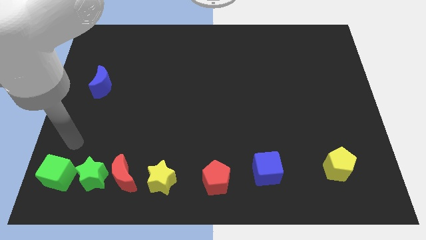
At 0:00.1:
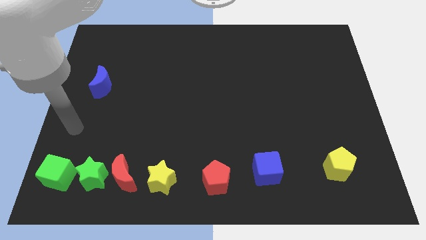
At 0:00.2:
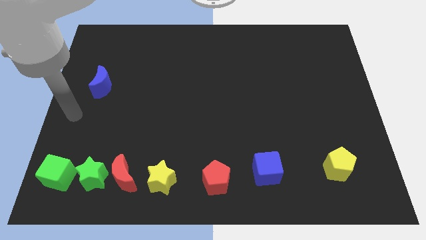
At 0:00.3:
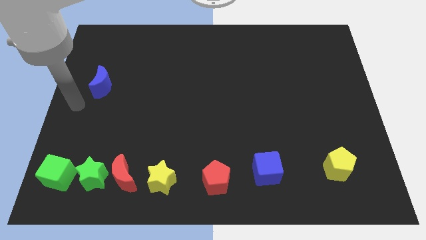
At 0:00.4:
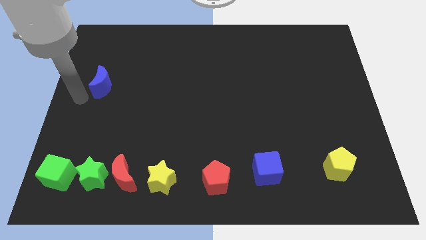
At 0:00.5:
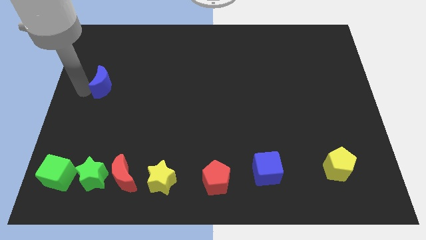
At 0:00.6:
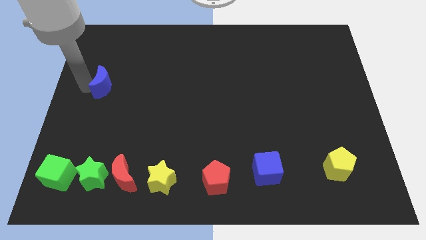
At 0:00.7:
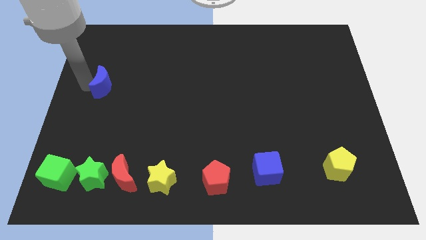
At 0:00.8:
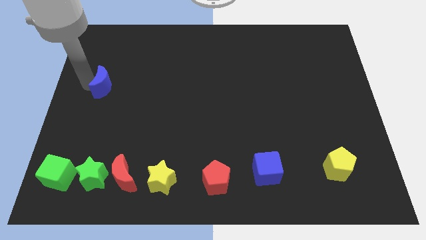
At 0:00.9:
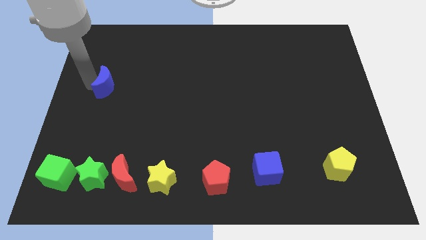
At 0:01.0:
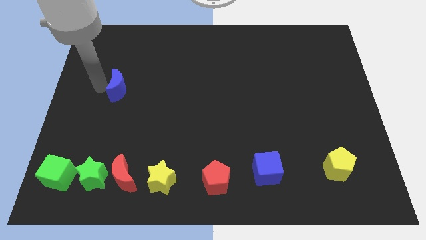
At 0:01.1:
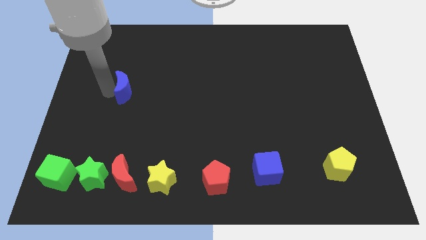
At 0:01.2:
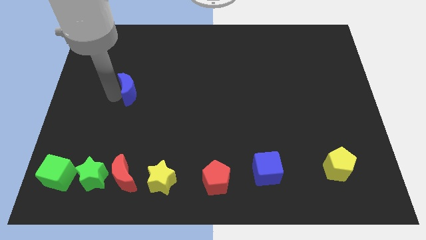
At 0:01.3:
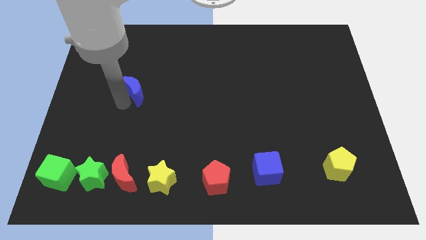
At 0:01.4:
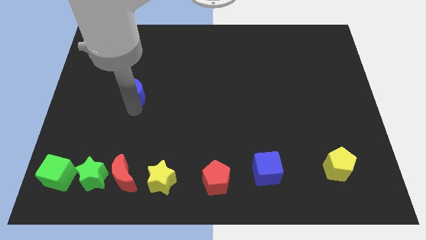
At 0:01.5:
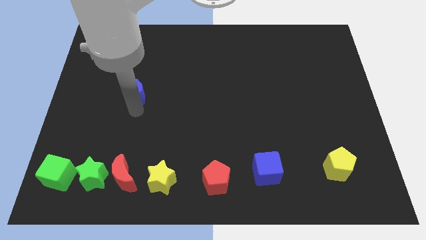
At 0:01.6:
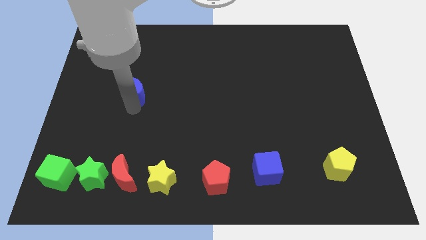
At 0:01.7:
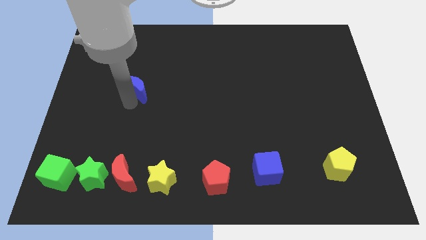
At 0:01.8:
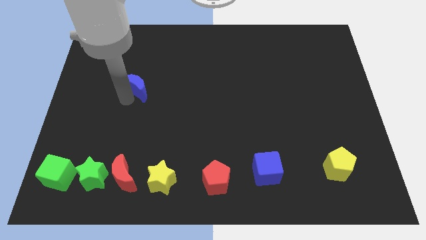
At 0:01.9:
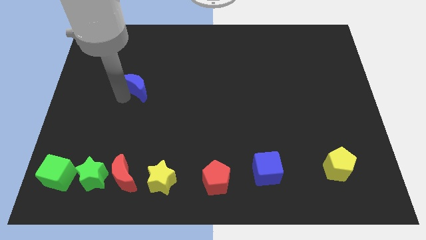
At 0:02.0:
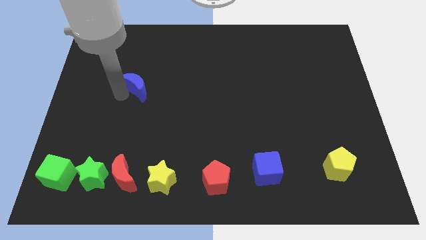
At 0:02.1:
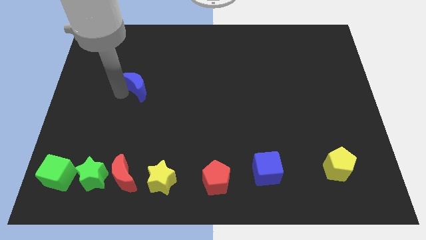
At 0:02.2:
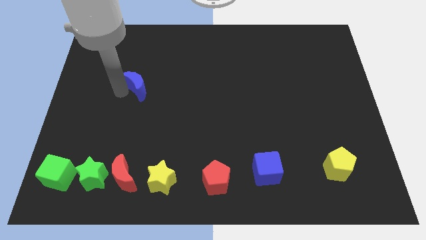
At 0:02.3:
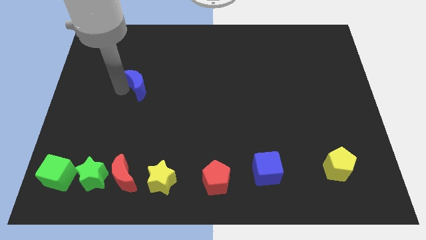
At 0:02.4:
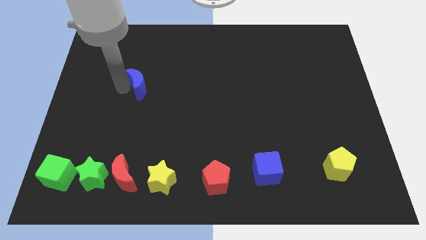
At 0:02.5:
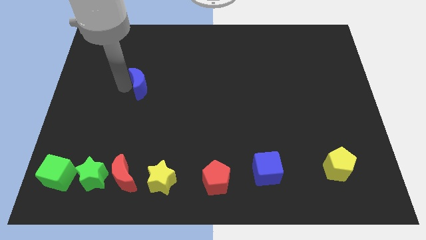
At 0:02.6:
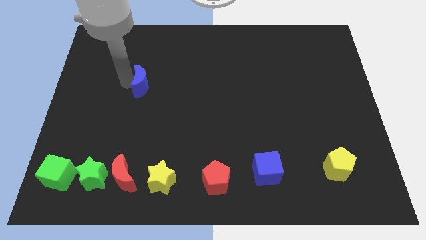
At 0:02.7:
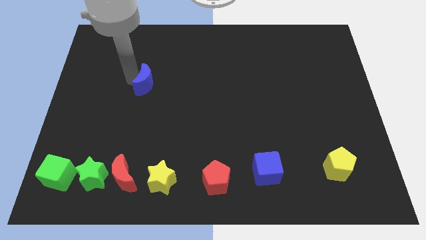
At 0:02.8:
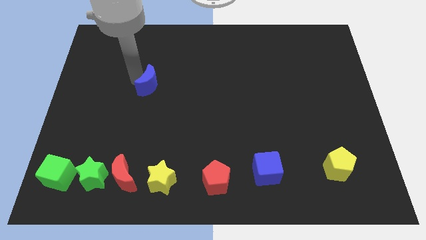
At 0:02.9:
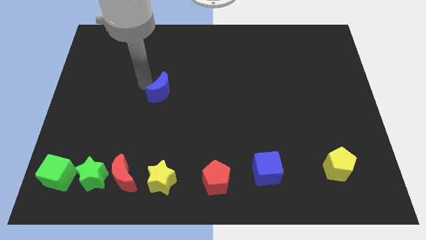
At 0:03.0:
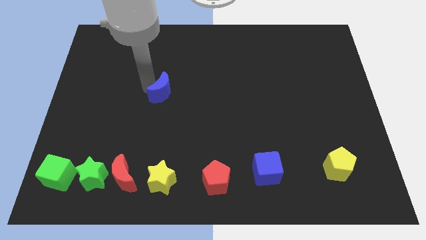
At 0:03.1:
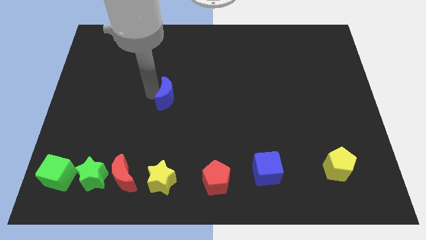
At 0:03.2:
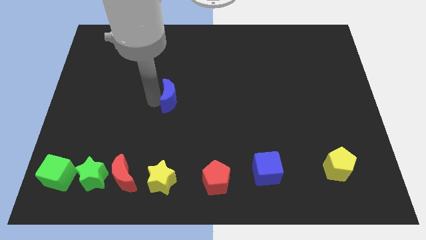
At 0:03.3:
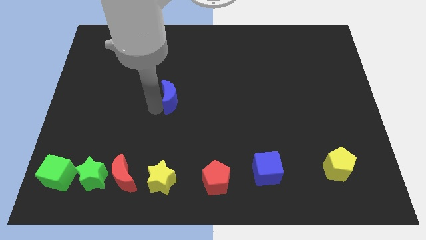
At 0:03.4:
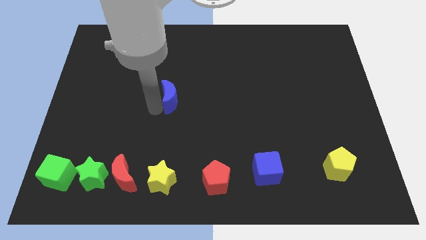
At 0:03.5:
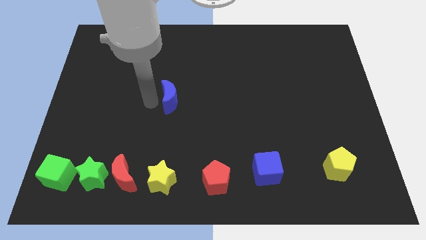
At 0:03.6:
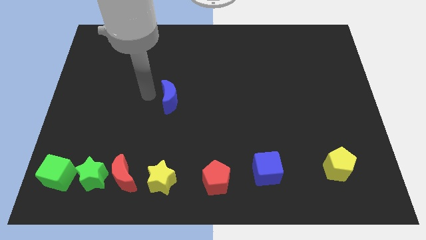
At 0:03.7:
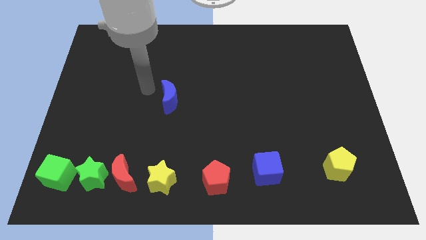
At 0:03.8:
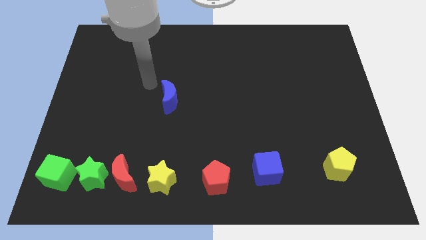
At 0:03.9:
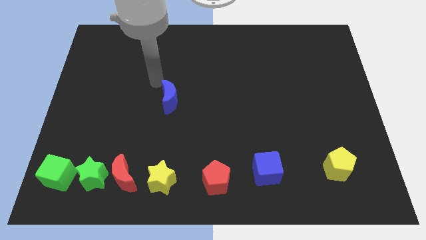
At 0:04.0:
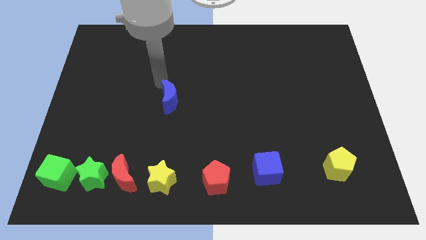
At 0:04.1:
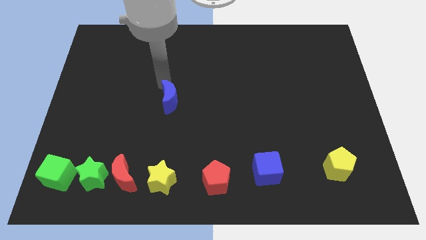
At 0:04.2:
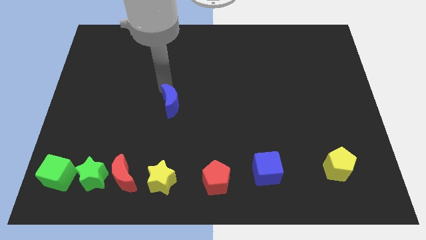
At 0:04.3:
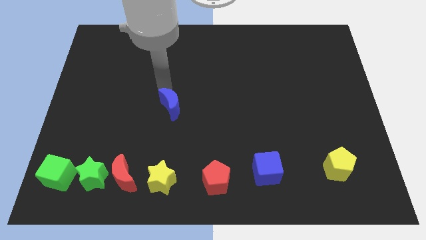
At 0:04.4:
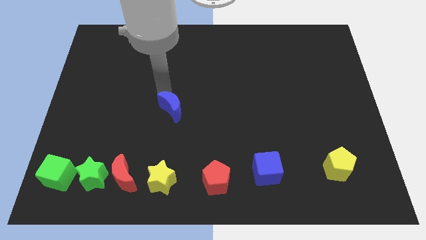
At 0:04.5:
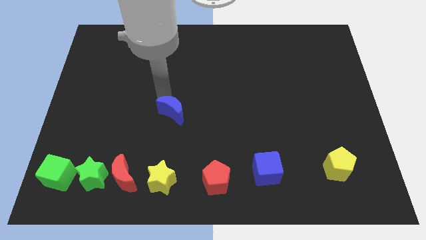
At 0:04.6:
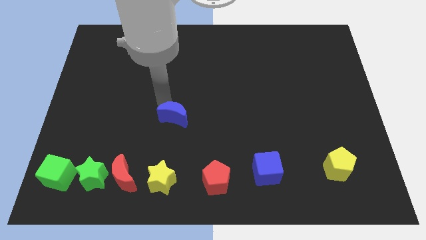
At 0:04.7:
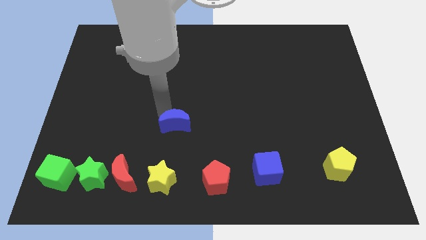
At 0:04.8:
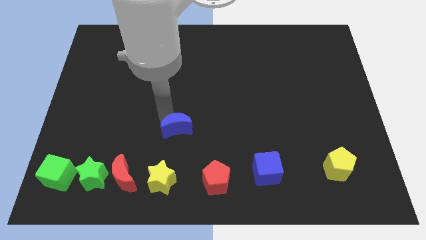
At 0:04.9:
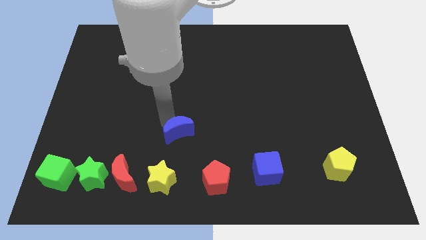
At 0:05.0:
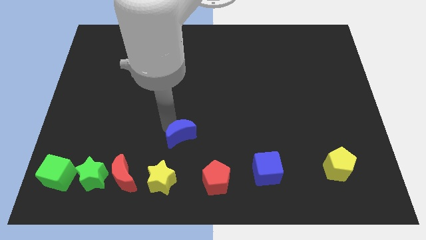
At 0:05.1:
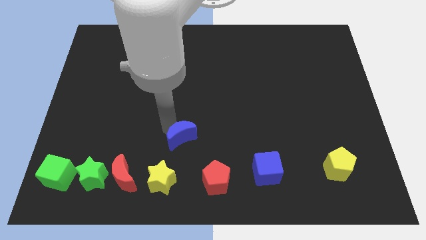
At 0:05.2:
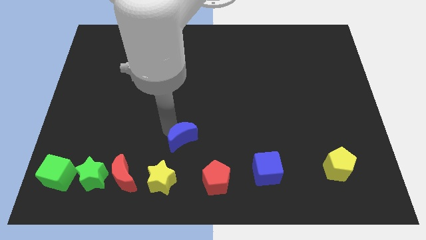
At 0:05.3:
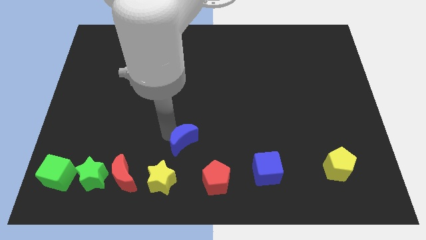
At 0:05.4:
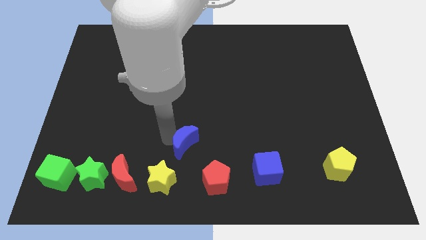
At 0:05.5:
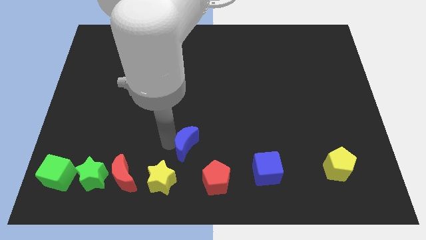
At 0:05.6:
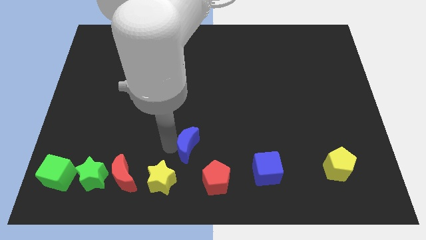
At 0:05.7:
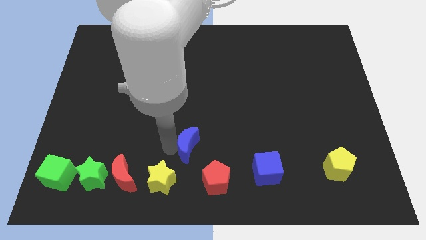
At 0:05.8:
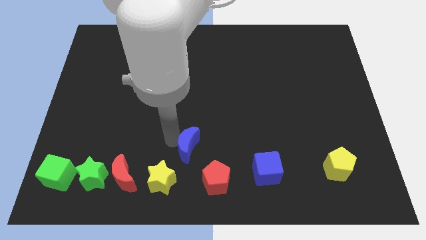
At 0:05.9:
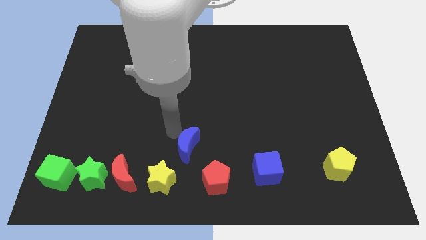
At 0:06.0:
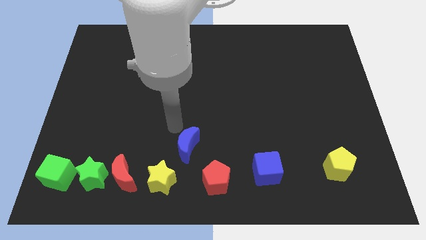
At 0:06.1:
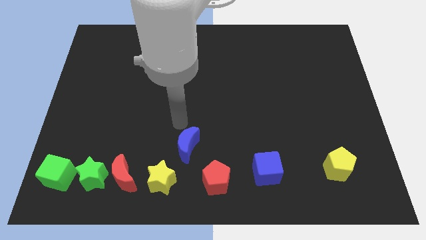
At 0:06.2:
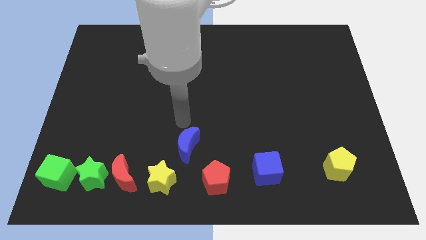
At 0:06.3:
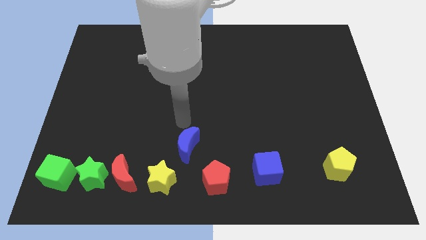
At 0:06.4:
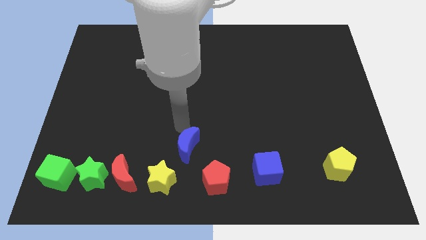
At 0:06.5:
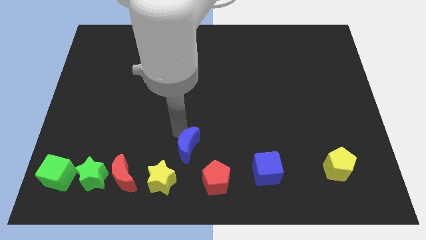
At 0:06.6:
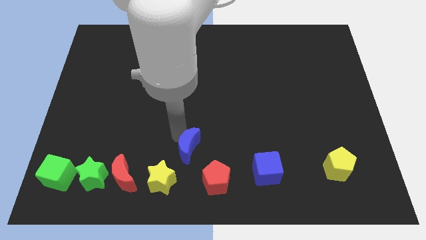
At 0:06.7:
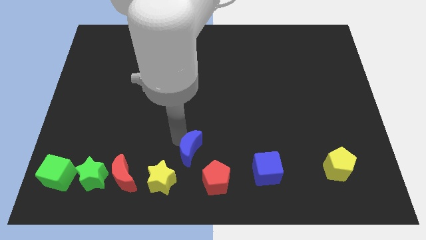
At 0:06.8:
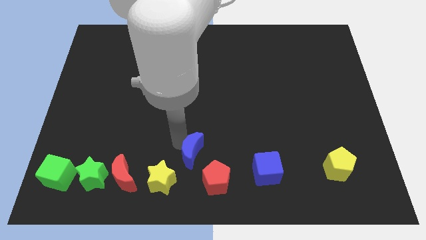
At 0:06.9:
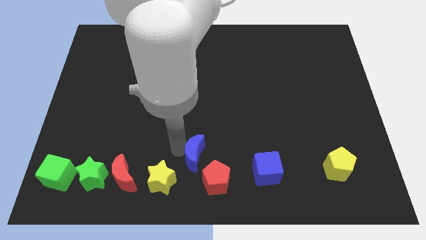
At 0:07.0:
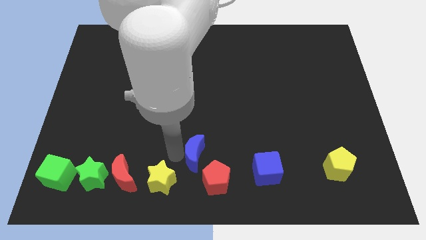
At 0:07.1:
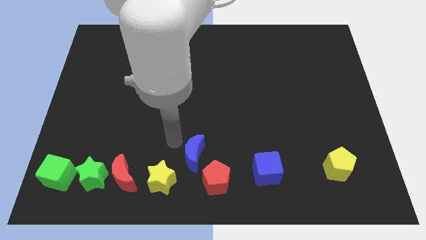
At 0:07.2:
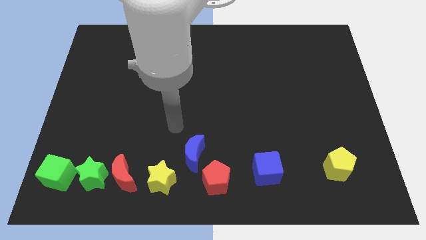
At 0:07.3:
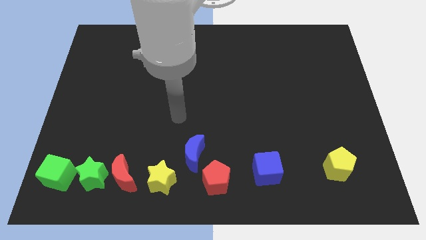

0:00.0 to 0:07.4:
place the blue moon above the pentagon

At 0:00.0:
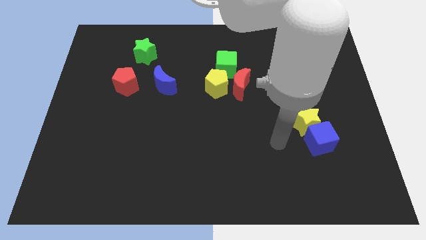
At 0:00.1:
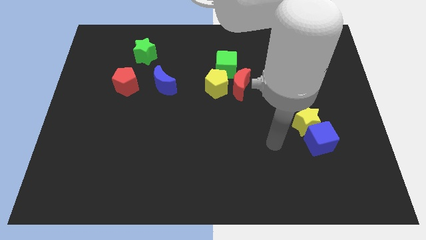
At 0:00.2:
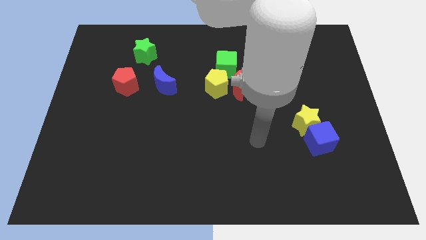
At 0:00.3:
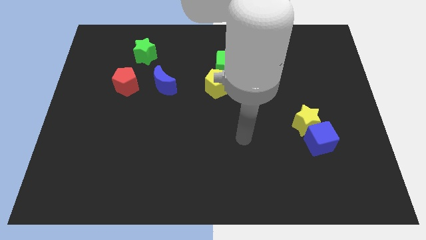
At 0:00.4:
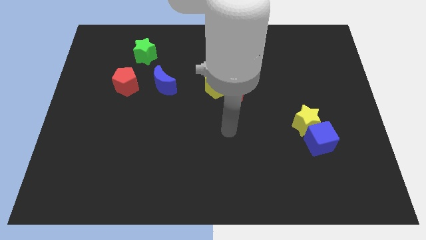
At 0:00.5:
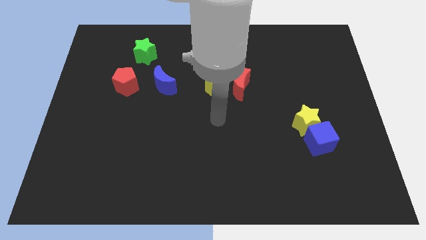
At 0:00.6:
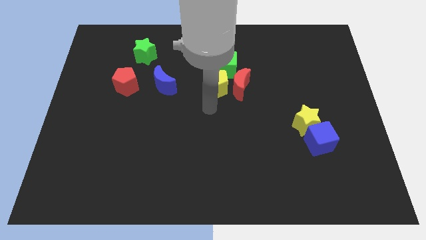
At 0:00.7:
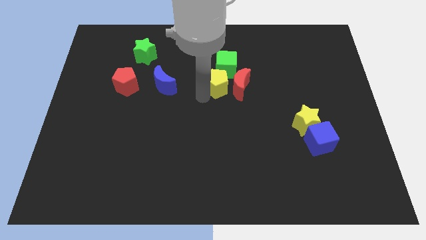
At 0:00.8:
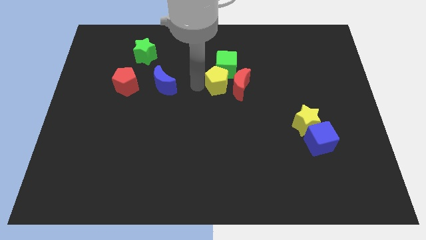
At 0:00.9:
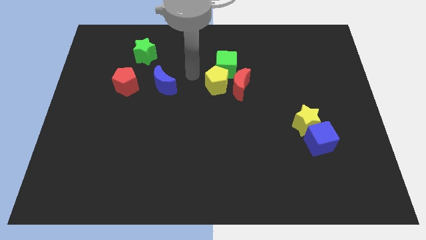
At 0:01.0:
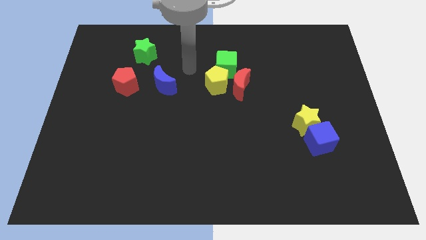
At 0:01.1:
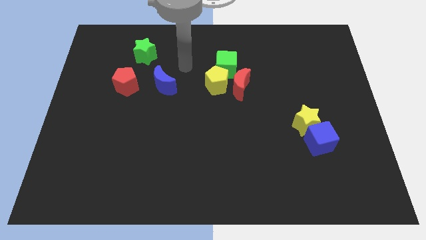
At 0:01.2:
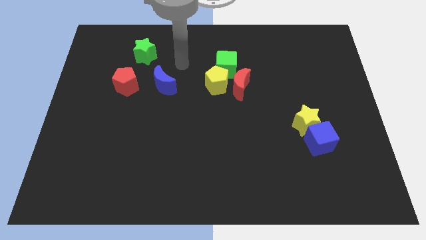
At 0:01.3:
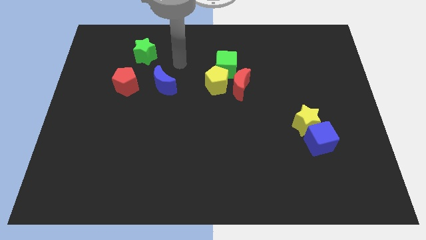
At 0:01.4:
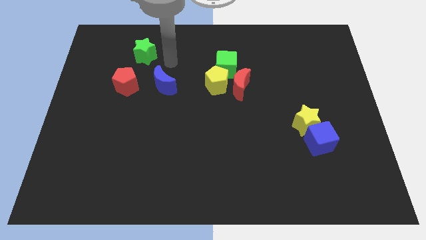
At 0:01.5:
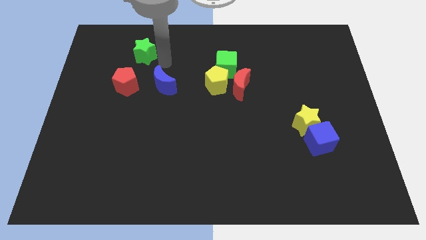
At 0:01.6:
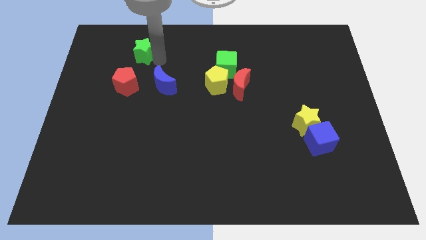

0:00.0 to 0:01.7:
touch the yellow pentagon on the left side
